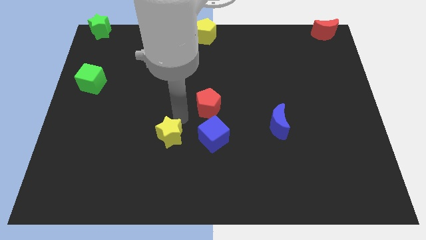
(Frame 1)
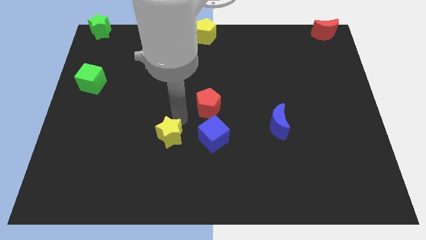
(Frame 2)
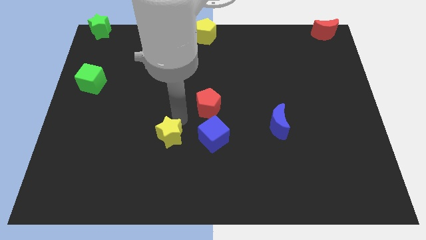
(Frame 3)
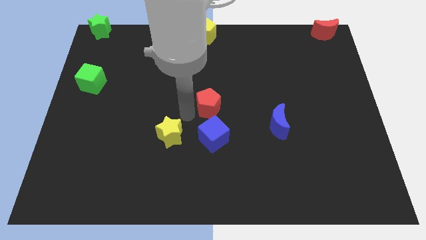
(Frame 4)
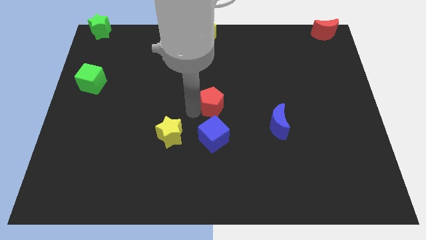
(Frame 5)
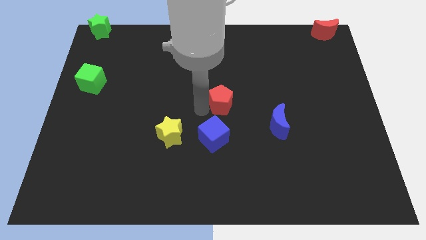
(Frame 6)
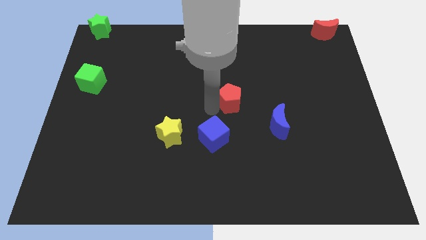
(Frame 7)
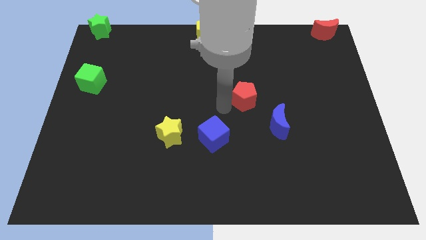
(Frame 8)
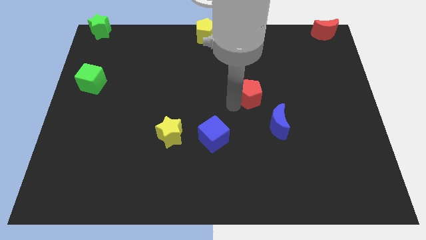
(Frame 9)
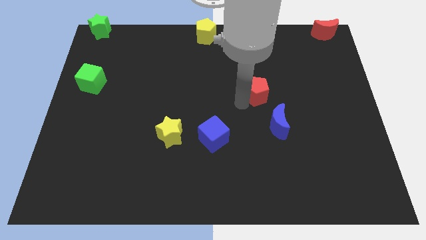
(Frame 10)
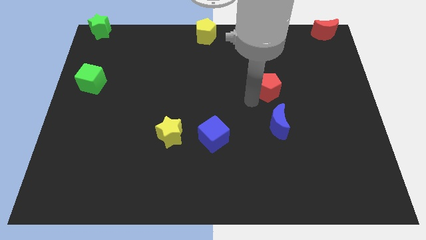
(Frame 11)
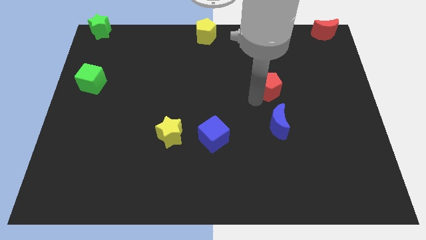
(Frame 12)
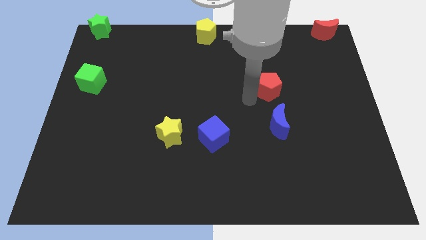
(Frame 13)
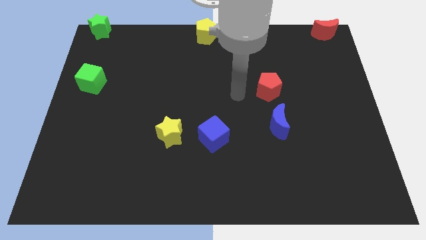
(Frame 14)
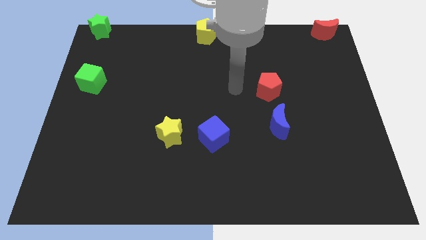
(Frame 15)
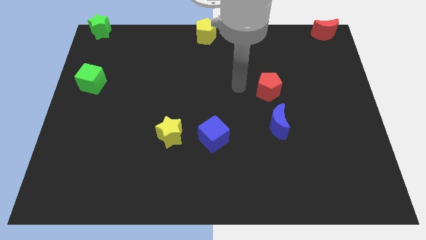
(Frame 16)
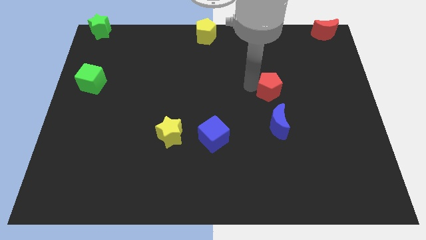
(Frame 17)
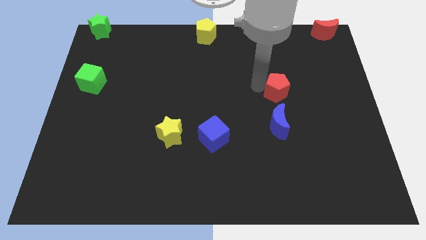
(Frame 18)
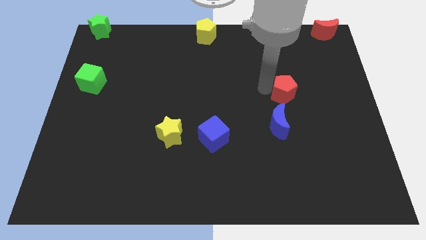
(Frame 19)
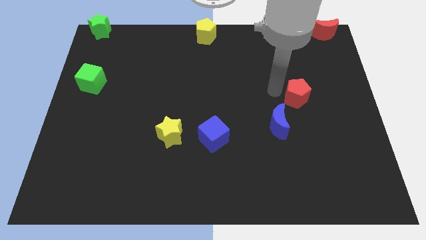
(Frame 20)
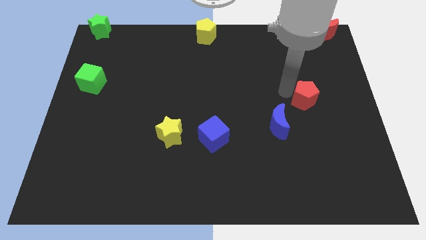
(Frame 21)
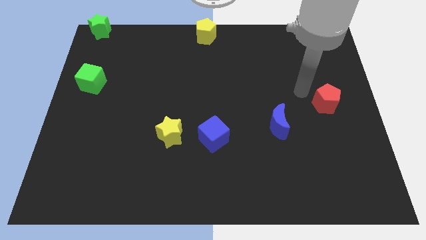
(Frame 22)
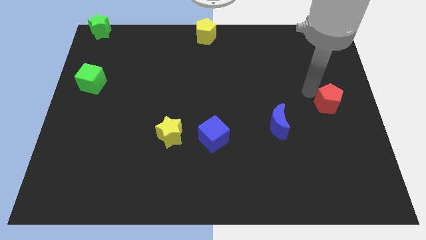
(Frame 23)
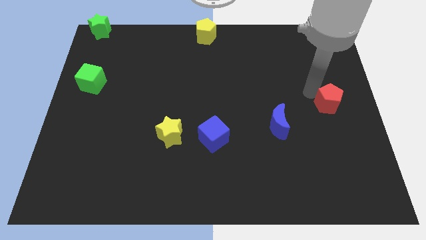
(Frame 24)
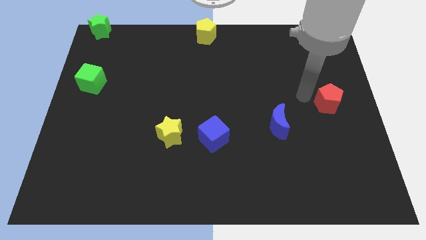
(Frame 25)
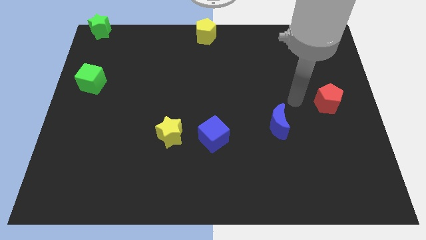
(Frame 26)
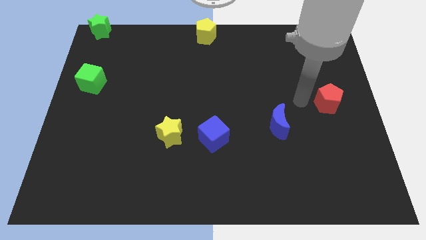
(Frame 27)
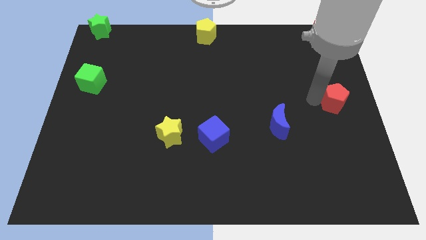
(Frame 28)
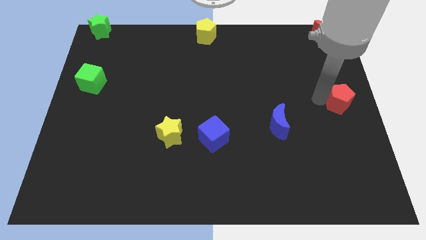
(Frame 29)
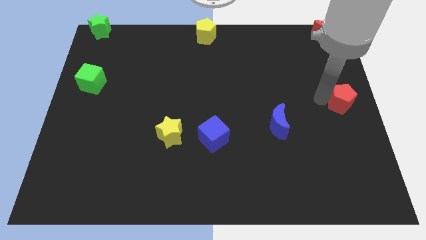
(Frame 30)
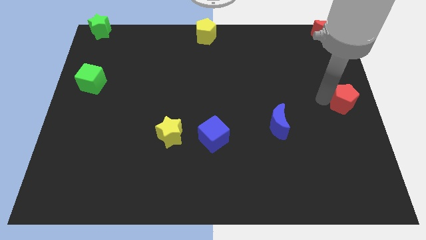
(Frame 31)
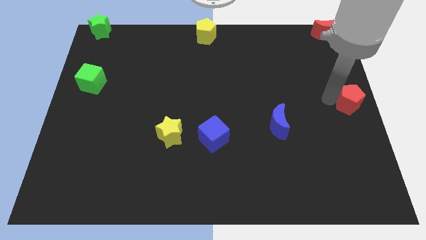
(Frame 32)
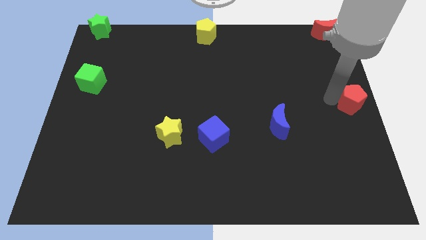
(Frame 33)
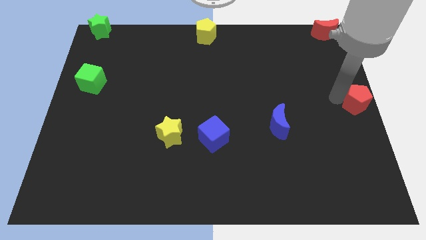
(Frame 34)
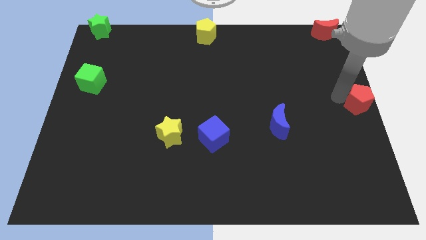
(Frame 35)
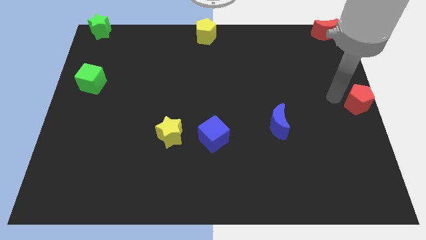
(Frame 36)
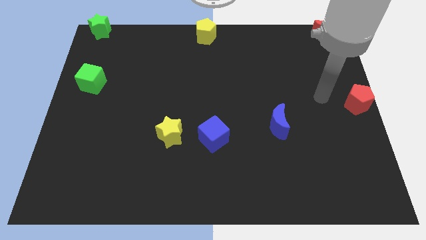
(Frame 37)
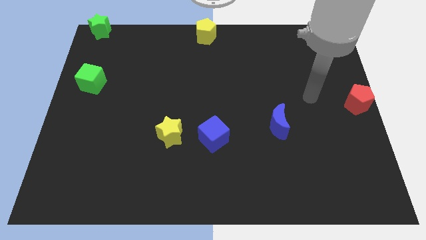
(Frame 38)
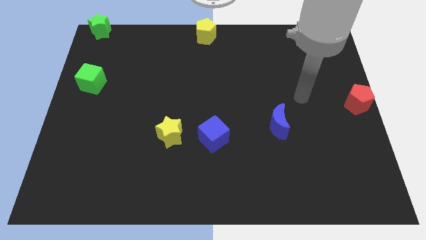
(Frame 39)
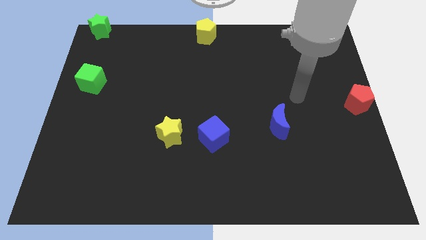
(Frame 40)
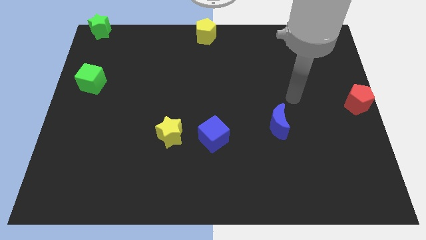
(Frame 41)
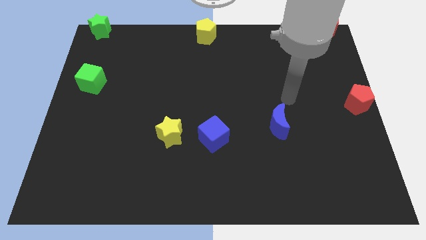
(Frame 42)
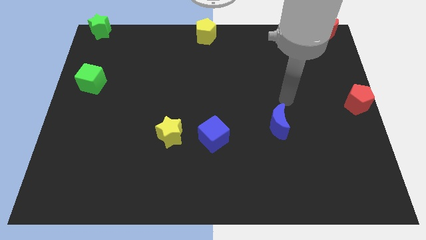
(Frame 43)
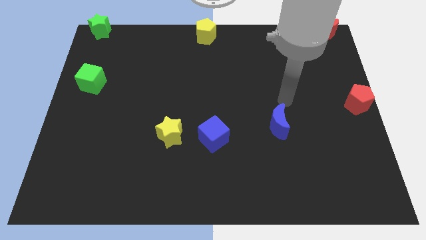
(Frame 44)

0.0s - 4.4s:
place red pentagon to the right center of the board

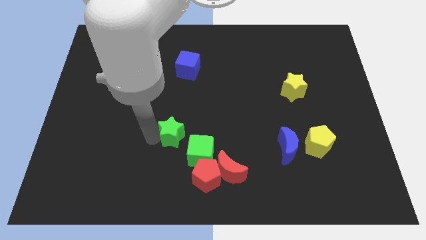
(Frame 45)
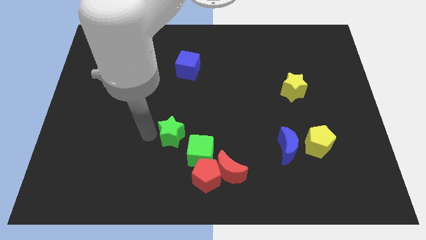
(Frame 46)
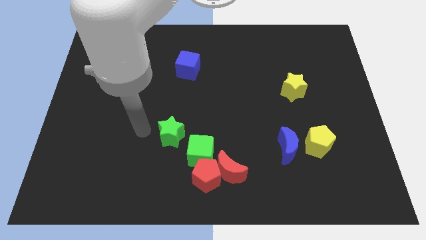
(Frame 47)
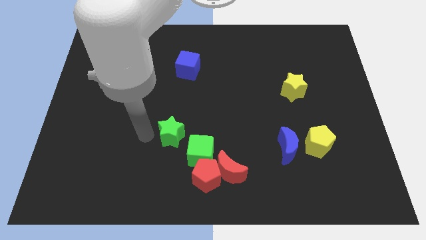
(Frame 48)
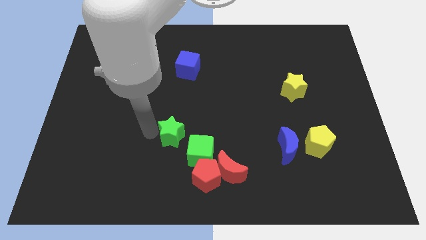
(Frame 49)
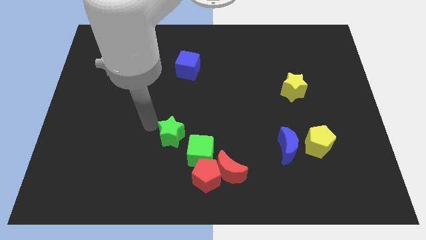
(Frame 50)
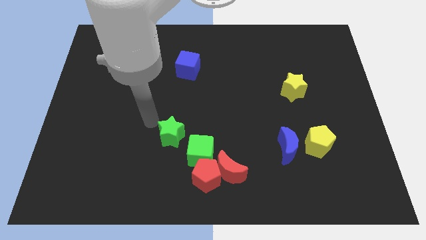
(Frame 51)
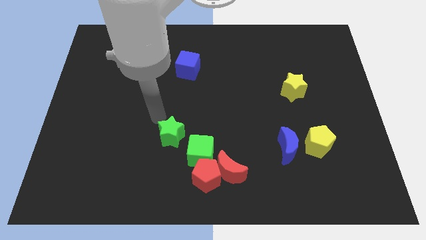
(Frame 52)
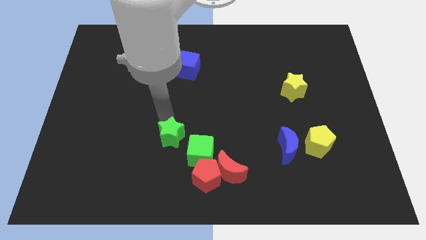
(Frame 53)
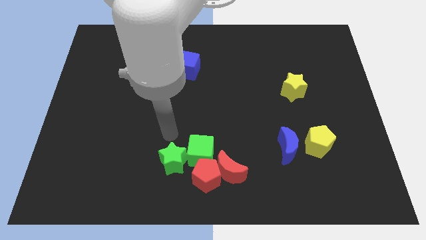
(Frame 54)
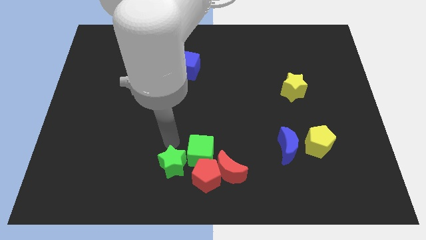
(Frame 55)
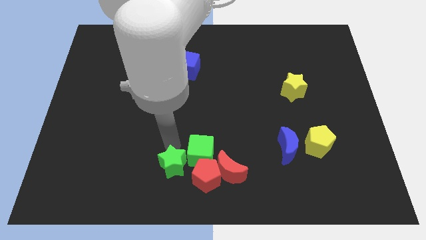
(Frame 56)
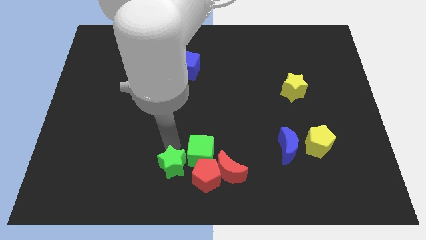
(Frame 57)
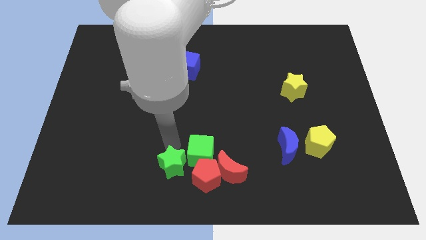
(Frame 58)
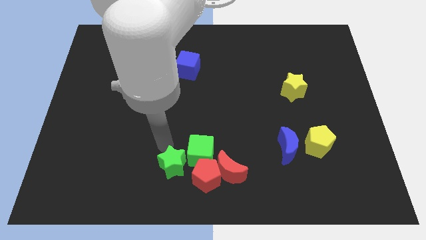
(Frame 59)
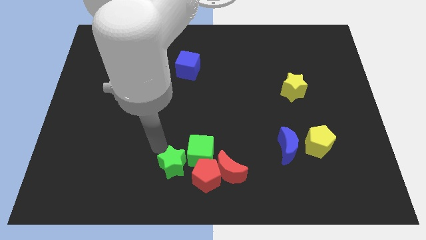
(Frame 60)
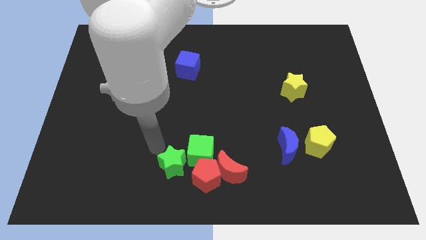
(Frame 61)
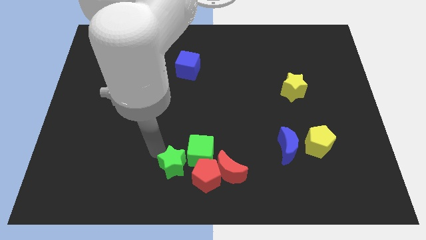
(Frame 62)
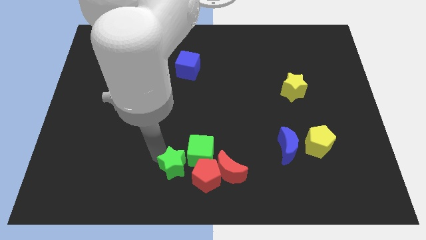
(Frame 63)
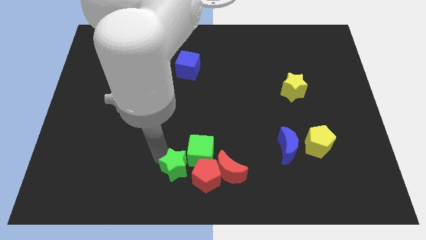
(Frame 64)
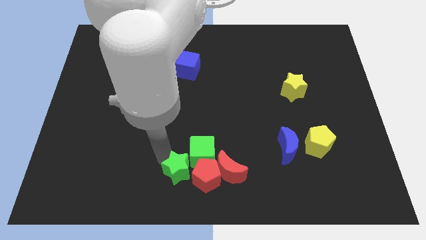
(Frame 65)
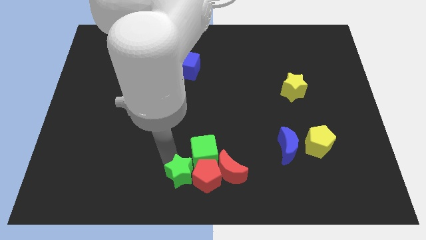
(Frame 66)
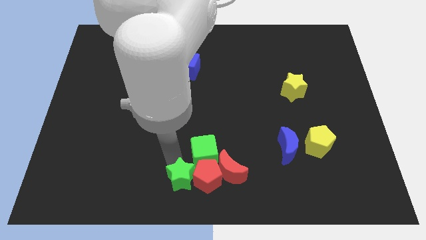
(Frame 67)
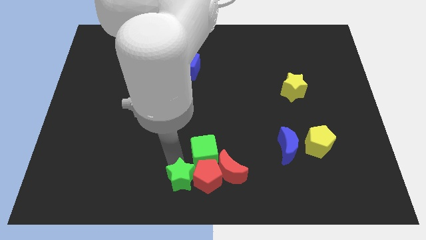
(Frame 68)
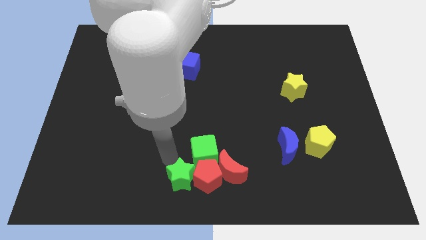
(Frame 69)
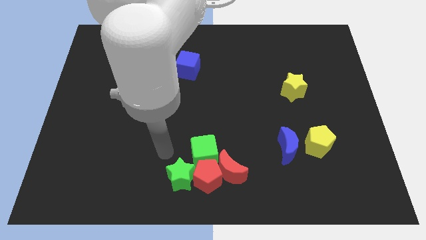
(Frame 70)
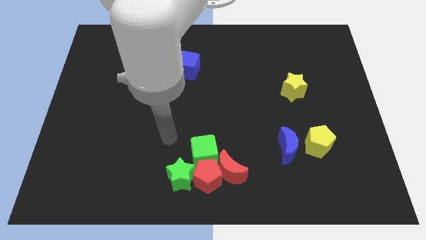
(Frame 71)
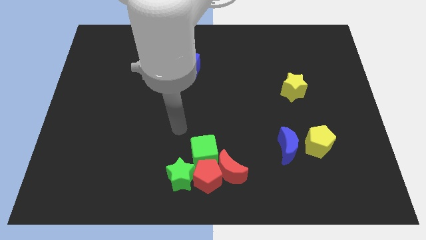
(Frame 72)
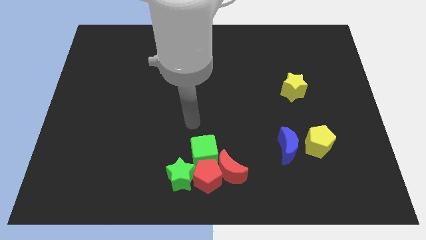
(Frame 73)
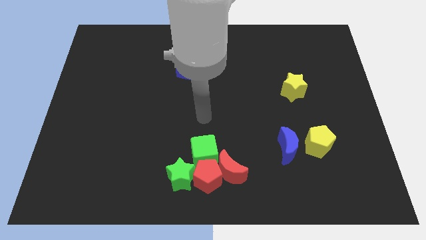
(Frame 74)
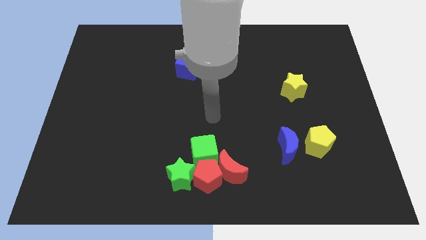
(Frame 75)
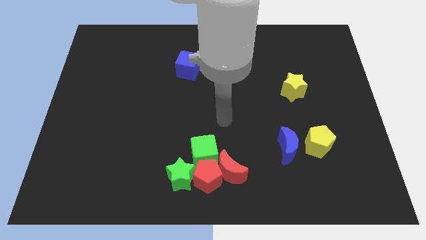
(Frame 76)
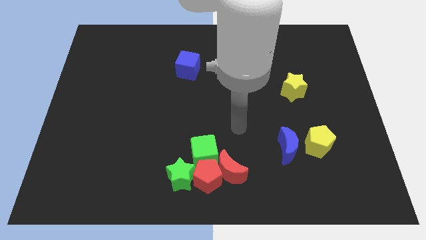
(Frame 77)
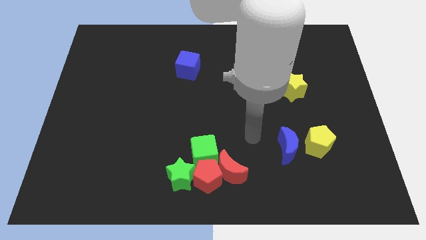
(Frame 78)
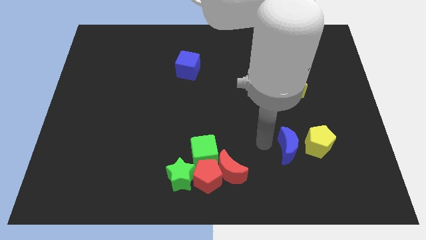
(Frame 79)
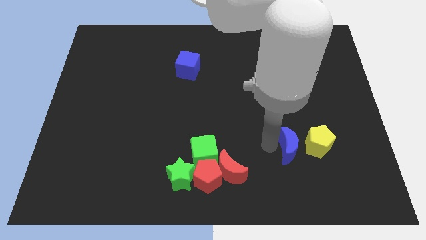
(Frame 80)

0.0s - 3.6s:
add the green star to the group of both red blocks and green cube at the bottom center of the board

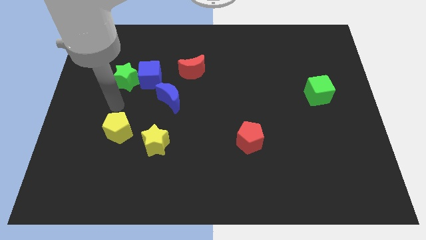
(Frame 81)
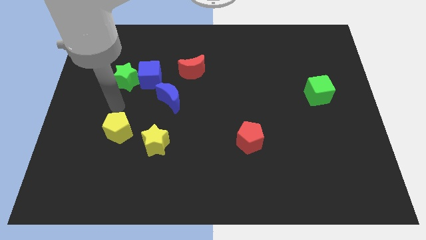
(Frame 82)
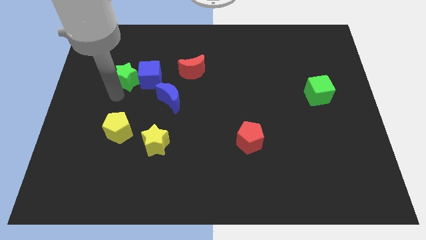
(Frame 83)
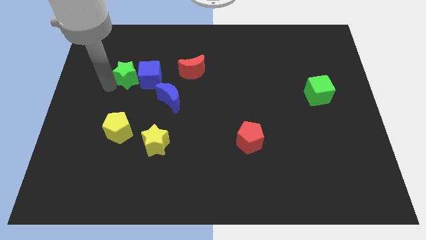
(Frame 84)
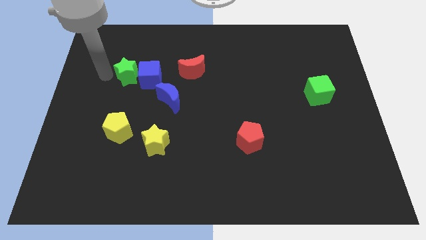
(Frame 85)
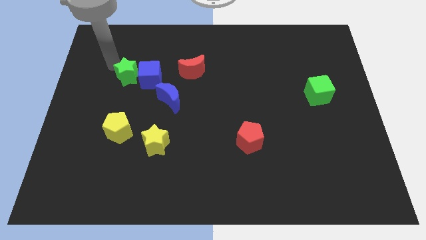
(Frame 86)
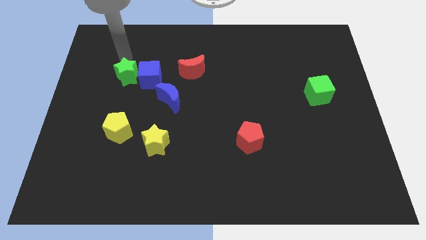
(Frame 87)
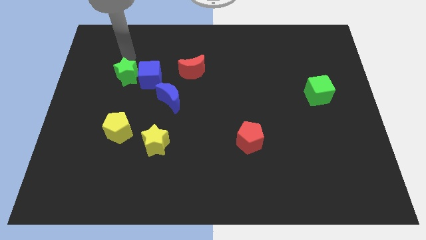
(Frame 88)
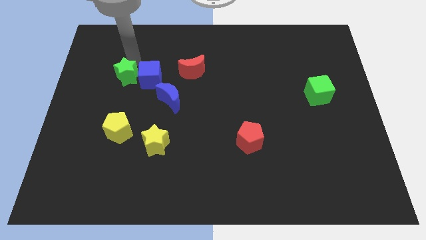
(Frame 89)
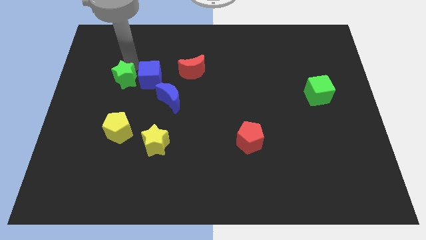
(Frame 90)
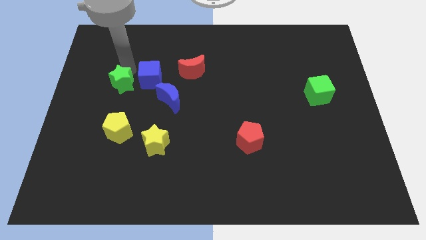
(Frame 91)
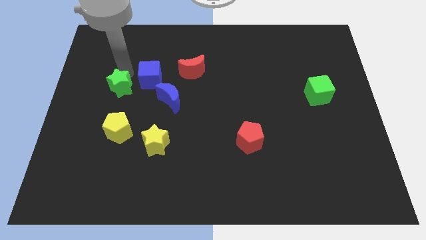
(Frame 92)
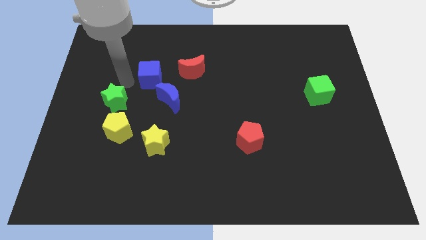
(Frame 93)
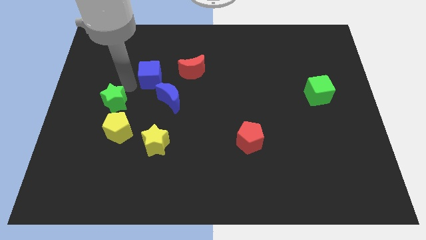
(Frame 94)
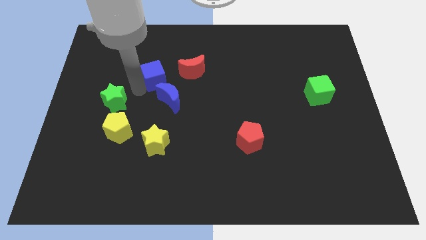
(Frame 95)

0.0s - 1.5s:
seperate green star and blue cube
